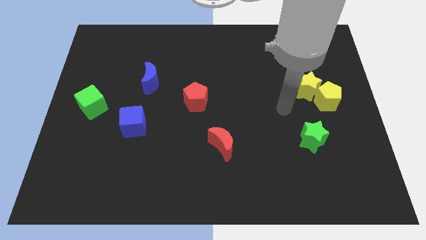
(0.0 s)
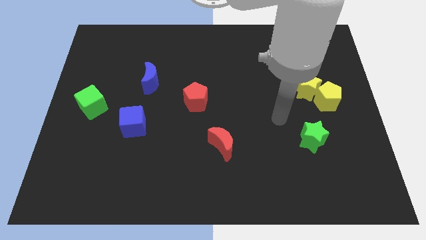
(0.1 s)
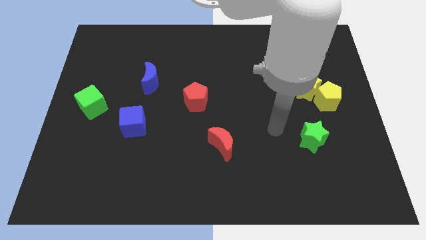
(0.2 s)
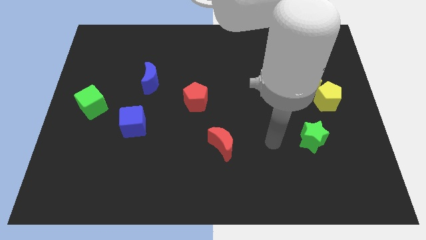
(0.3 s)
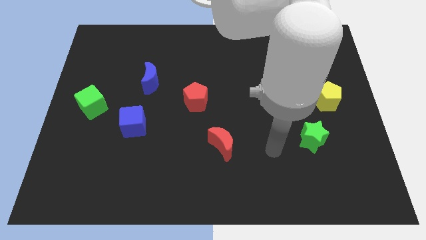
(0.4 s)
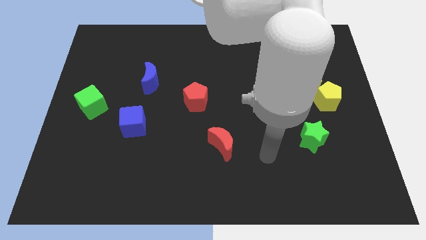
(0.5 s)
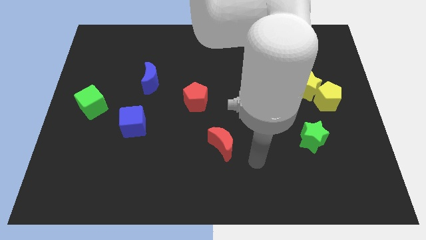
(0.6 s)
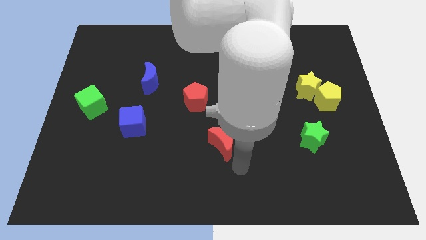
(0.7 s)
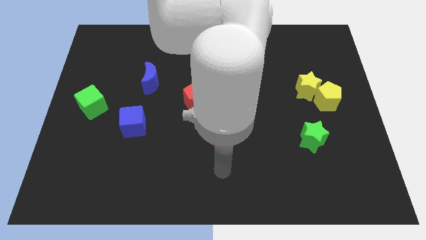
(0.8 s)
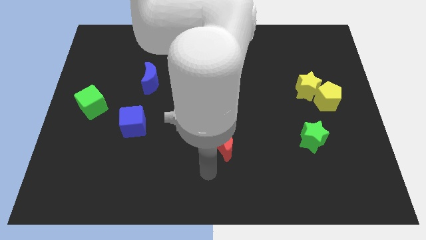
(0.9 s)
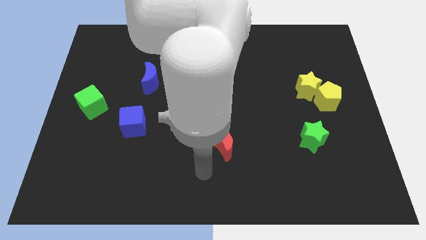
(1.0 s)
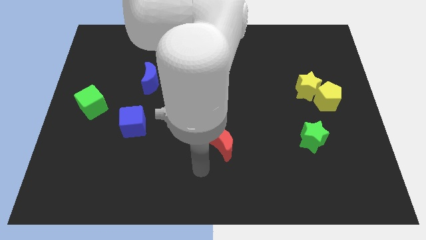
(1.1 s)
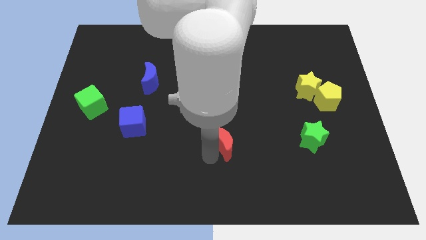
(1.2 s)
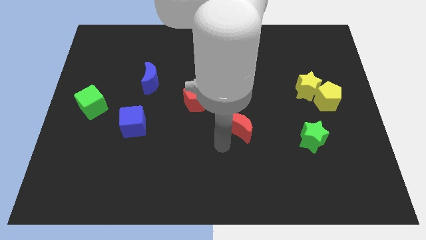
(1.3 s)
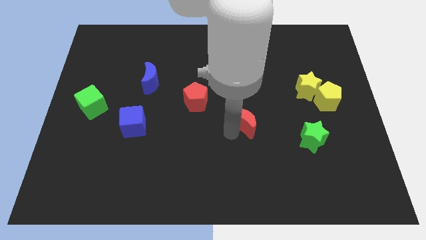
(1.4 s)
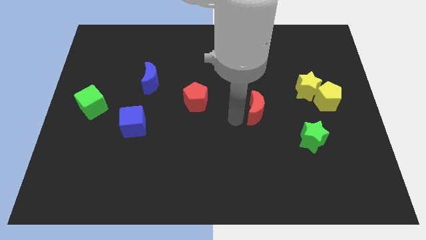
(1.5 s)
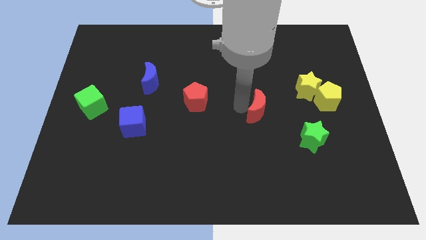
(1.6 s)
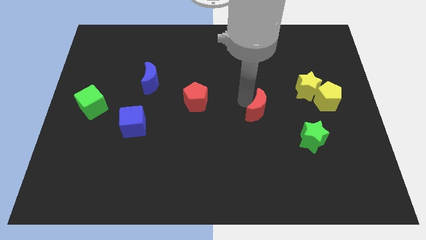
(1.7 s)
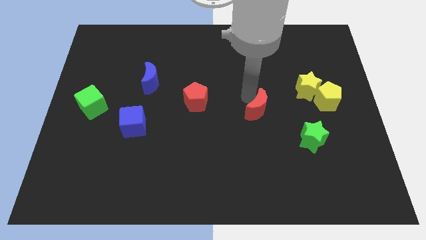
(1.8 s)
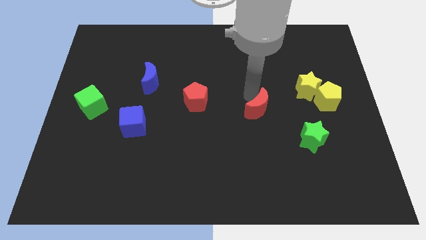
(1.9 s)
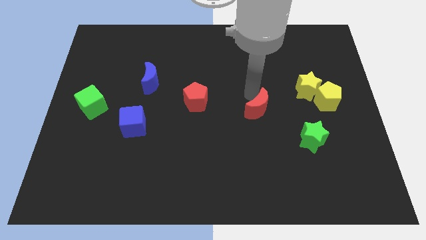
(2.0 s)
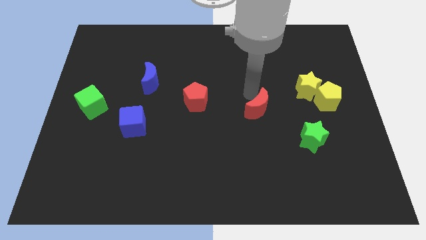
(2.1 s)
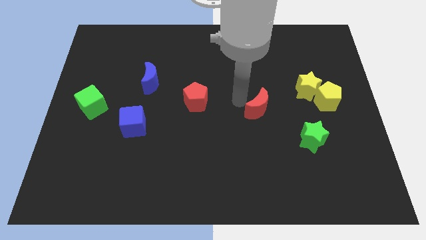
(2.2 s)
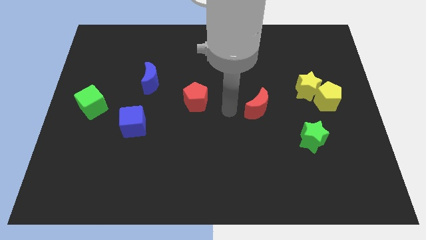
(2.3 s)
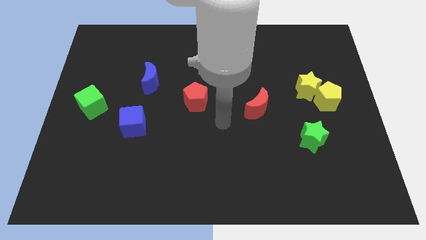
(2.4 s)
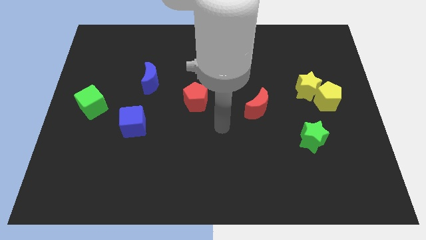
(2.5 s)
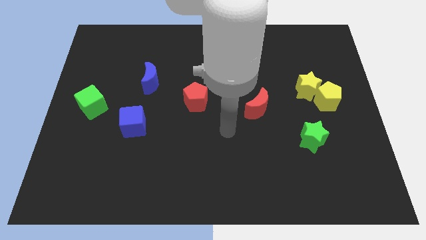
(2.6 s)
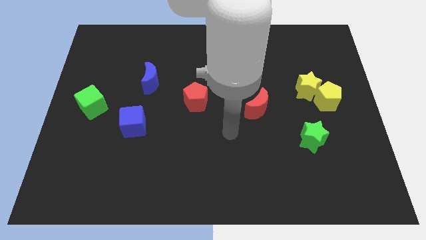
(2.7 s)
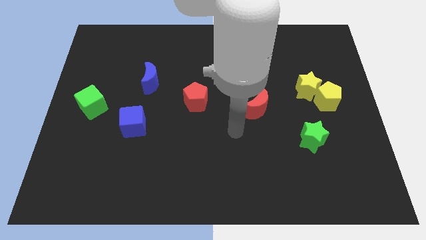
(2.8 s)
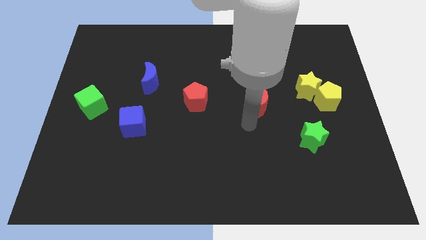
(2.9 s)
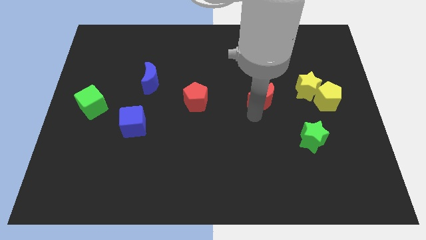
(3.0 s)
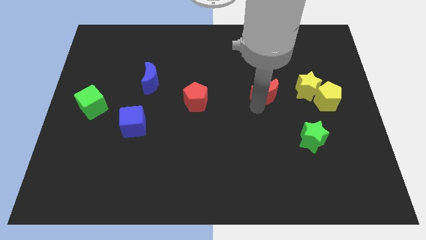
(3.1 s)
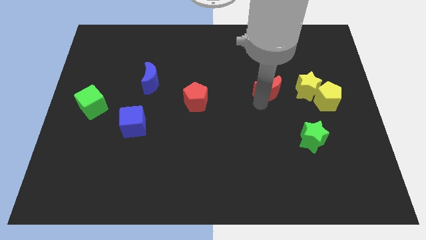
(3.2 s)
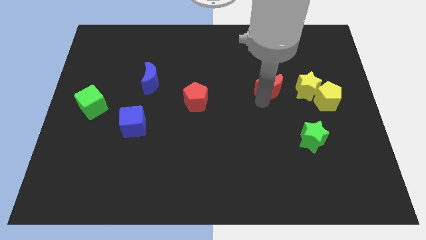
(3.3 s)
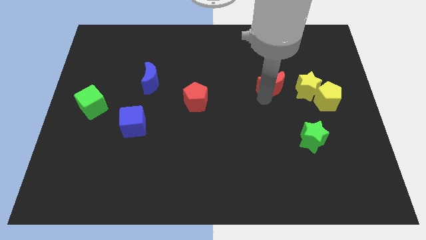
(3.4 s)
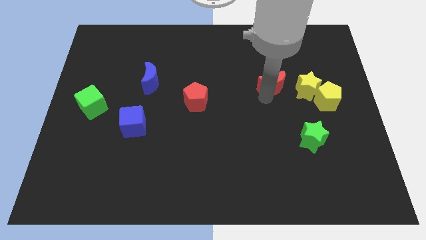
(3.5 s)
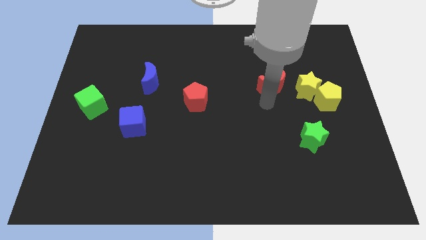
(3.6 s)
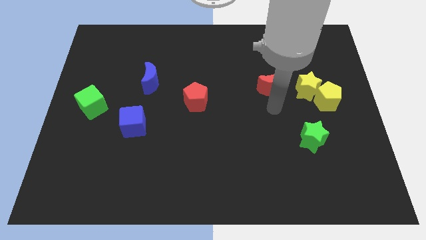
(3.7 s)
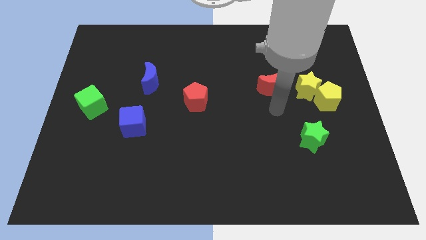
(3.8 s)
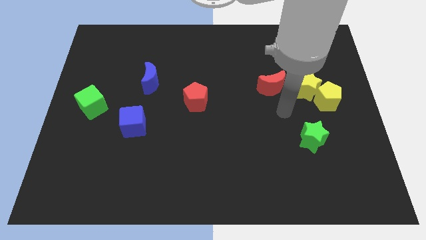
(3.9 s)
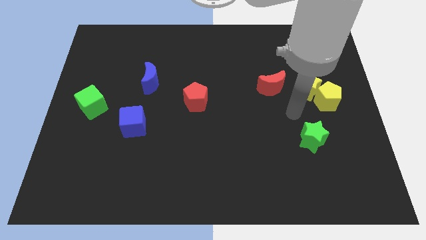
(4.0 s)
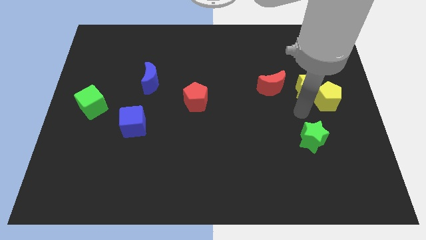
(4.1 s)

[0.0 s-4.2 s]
place the red crescent beside the yellow star

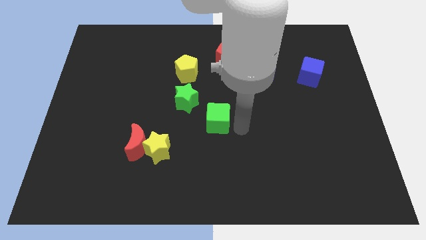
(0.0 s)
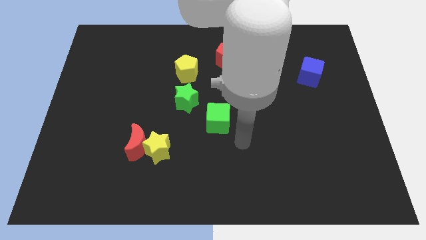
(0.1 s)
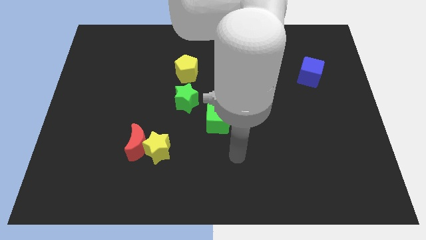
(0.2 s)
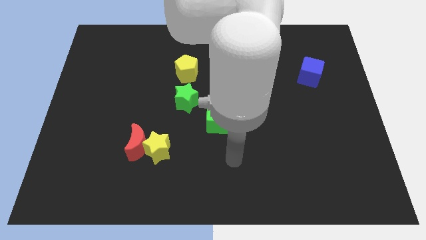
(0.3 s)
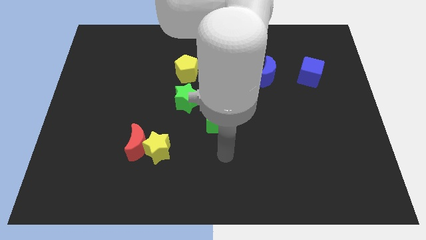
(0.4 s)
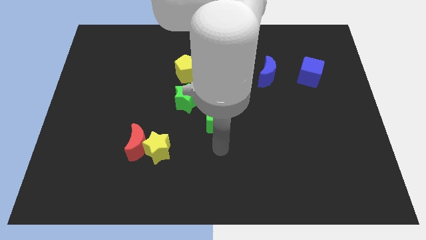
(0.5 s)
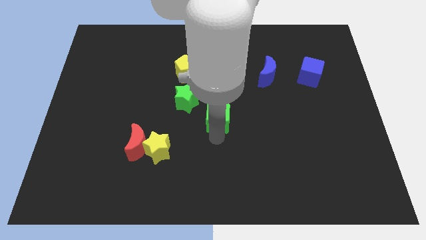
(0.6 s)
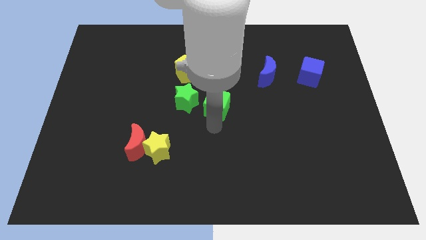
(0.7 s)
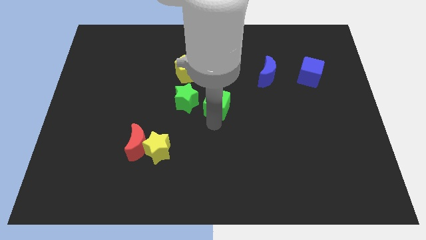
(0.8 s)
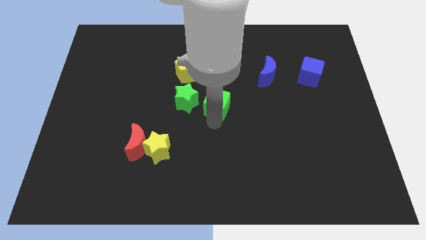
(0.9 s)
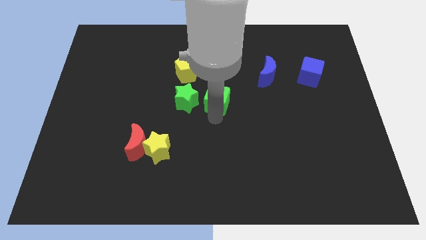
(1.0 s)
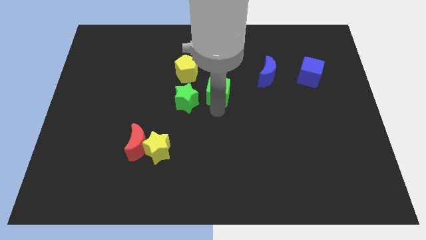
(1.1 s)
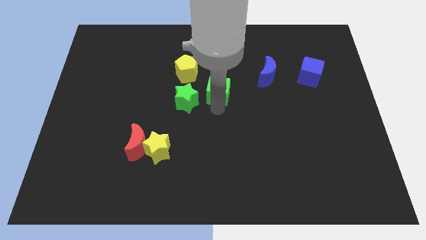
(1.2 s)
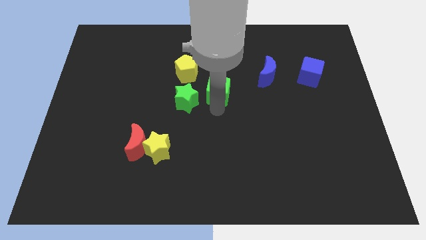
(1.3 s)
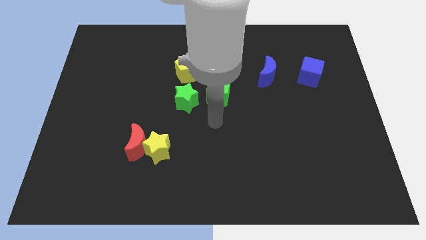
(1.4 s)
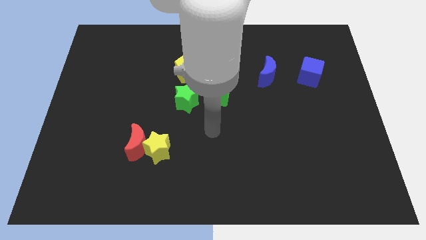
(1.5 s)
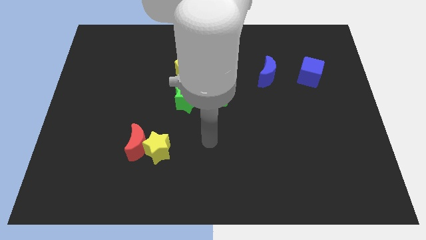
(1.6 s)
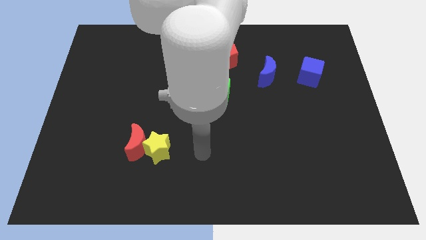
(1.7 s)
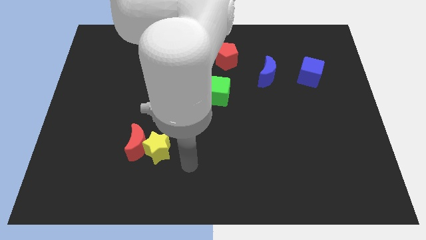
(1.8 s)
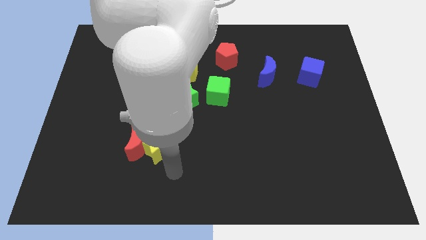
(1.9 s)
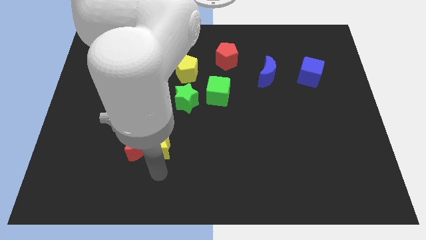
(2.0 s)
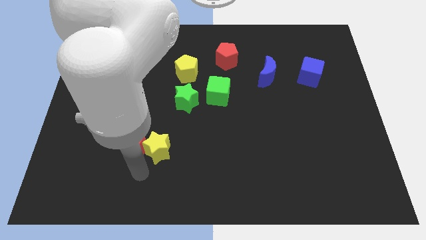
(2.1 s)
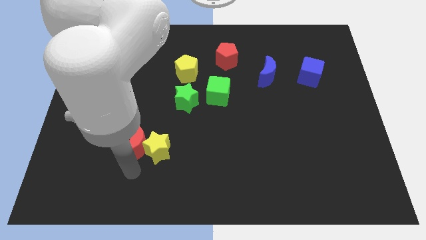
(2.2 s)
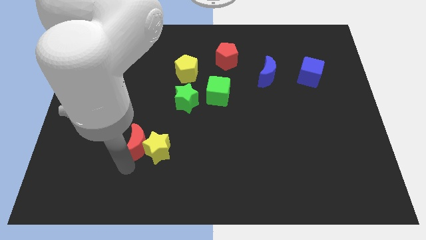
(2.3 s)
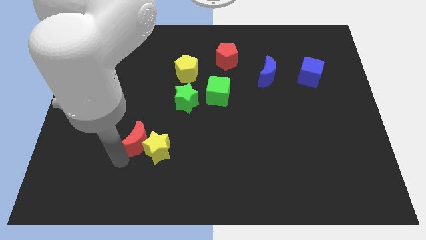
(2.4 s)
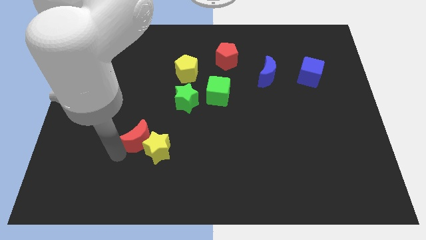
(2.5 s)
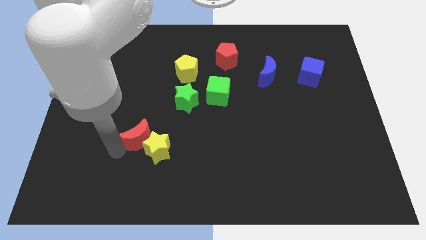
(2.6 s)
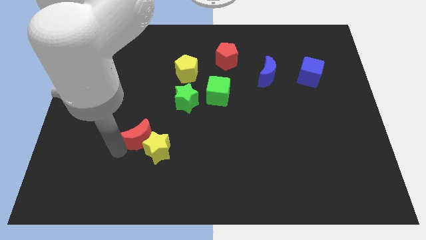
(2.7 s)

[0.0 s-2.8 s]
touch the bottom left of the red crescent

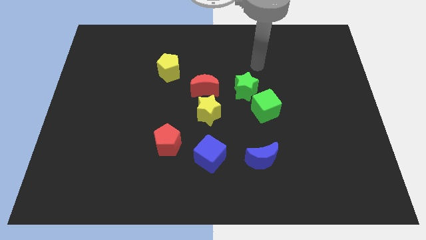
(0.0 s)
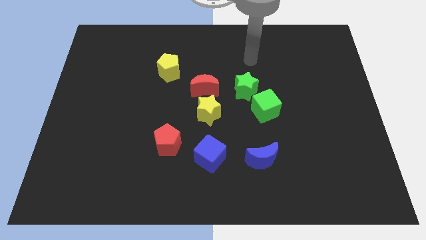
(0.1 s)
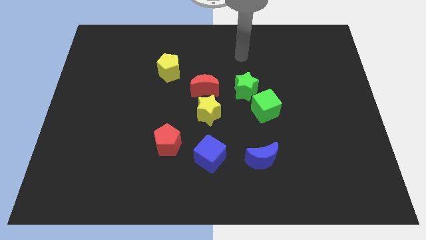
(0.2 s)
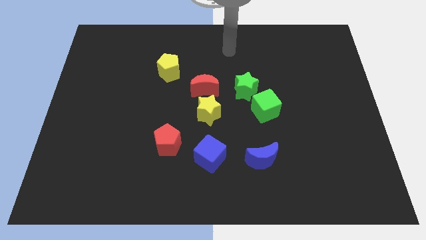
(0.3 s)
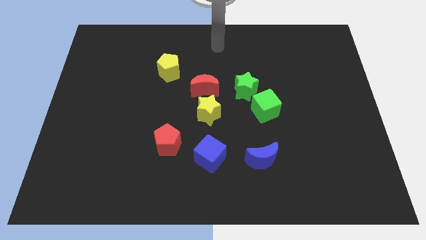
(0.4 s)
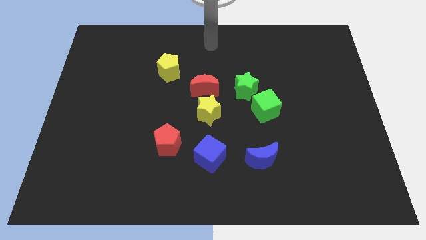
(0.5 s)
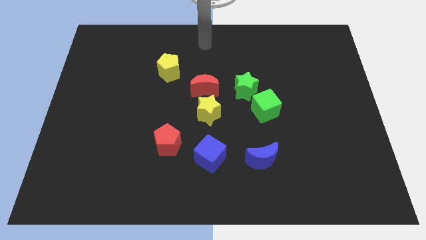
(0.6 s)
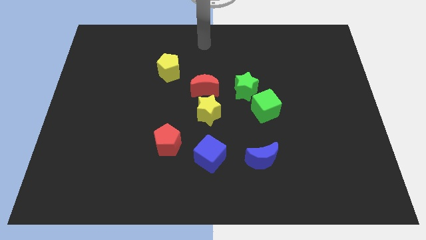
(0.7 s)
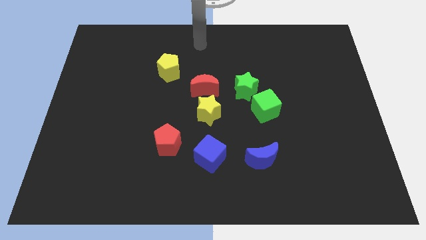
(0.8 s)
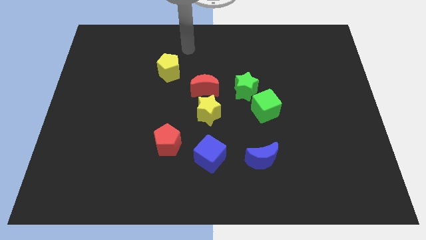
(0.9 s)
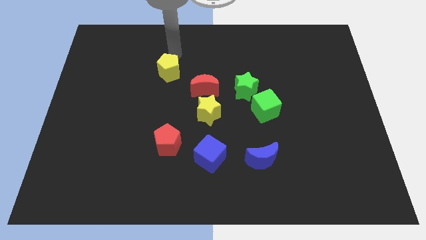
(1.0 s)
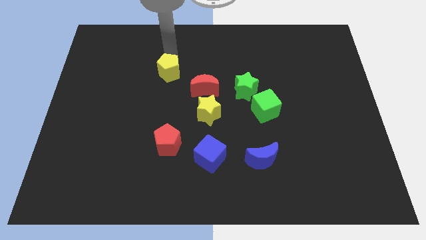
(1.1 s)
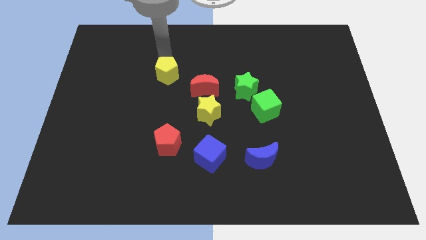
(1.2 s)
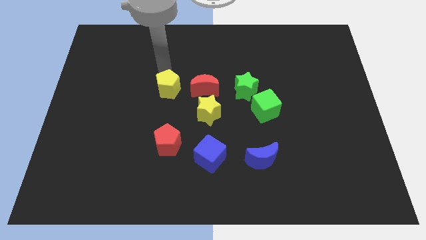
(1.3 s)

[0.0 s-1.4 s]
move the yellow pentagon slightly to the bottom

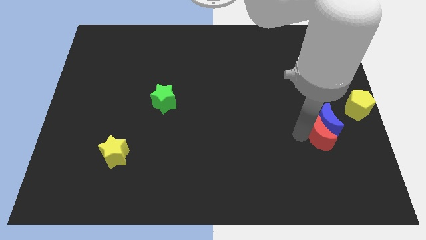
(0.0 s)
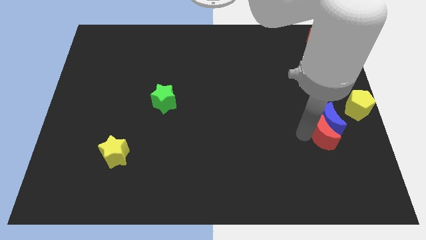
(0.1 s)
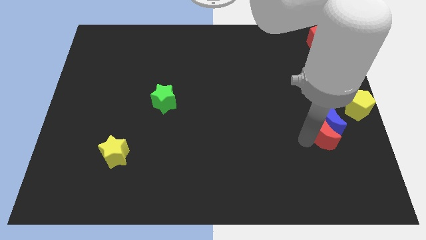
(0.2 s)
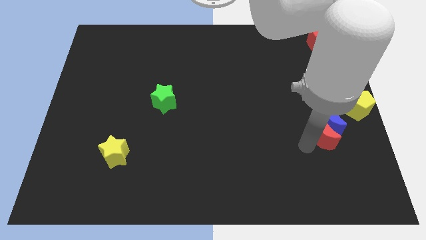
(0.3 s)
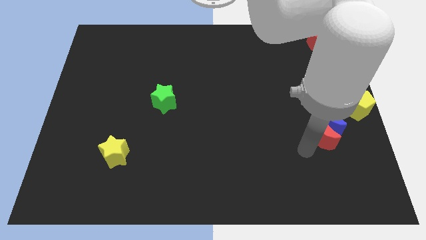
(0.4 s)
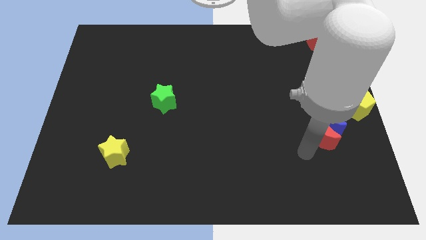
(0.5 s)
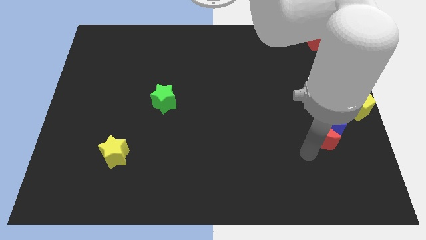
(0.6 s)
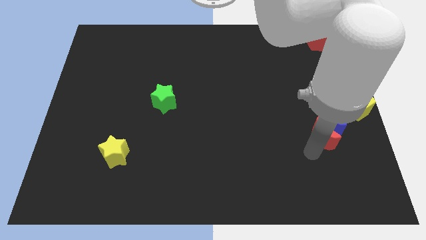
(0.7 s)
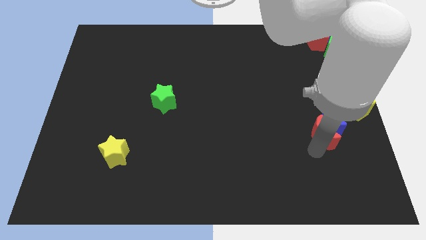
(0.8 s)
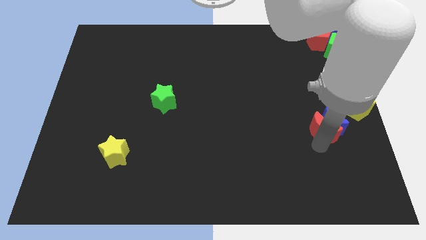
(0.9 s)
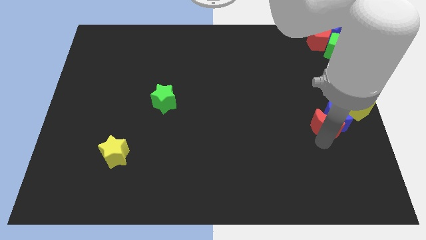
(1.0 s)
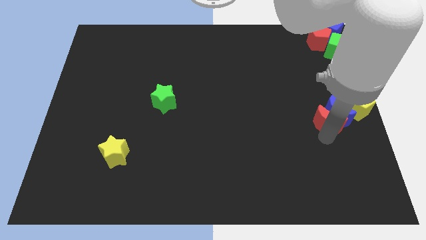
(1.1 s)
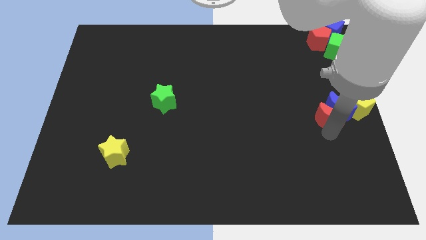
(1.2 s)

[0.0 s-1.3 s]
place the blue crescent and red crescent towards the bottom left side of the yellow pentagon
